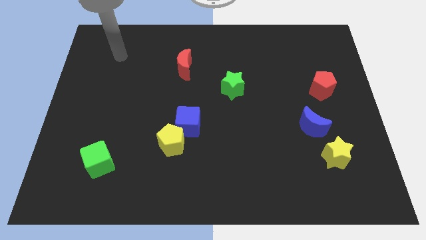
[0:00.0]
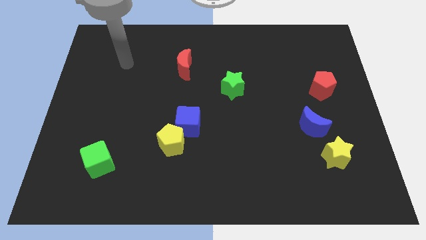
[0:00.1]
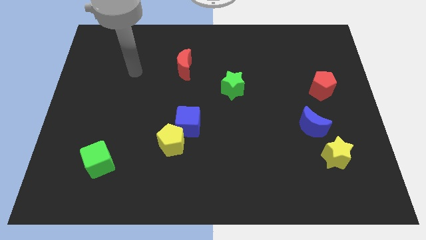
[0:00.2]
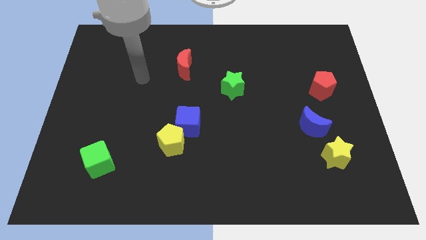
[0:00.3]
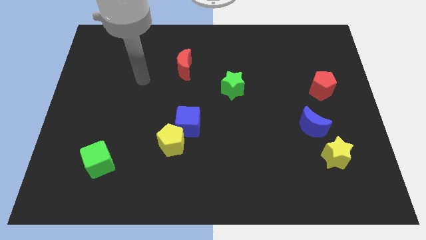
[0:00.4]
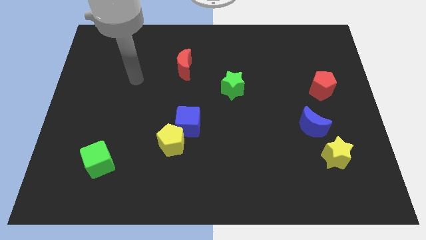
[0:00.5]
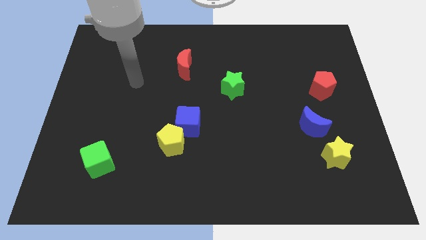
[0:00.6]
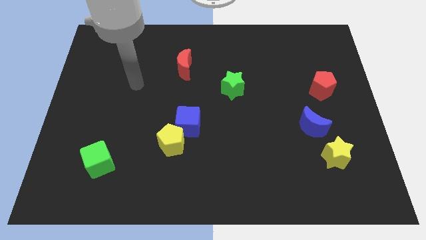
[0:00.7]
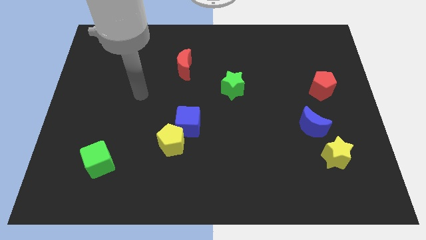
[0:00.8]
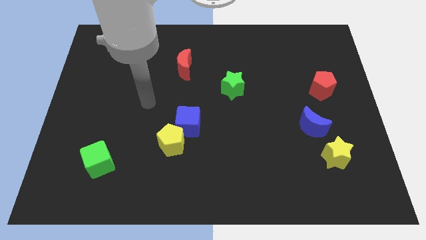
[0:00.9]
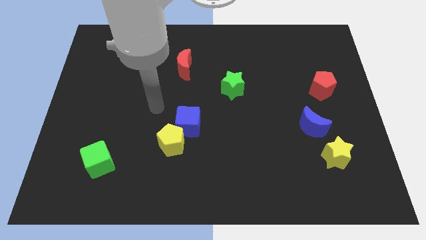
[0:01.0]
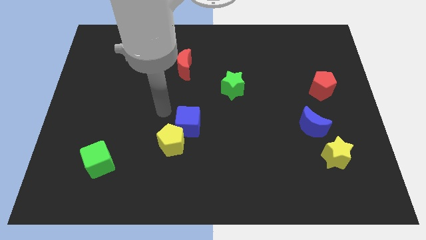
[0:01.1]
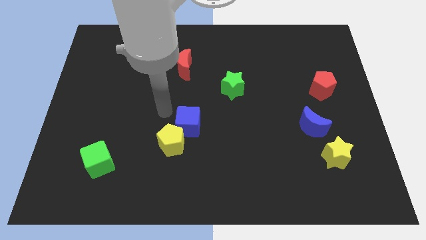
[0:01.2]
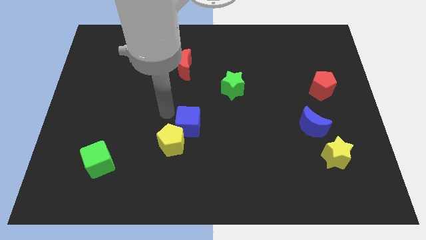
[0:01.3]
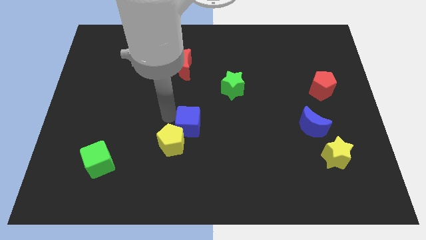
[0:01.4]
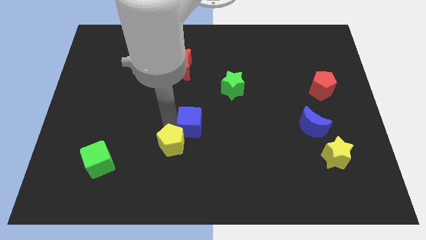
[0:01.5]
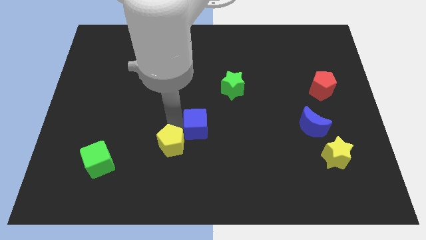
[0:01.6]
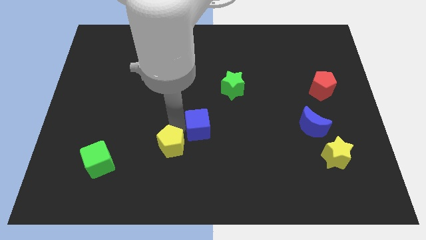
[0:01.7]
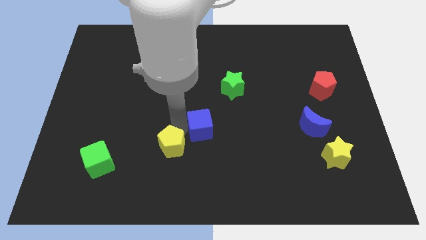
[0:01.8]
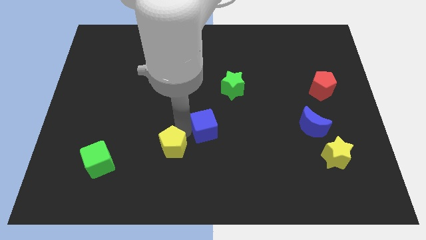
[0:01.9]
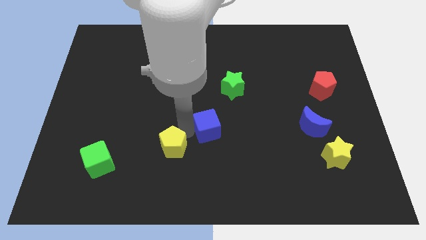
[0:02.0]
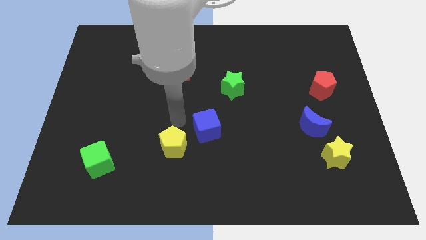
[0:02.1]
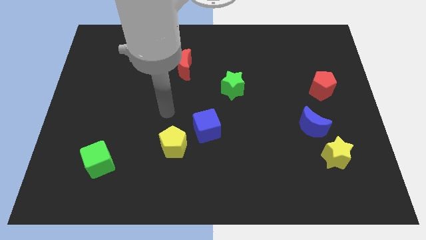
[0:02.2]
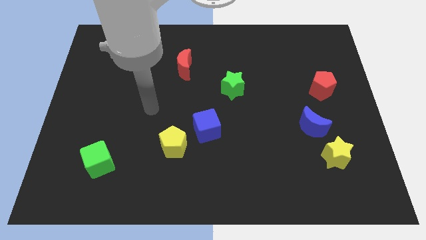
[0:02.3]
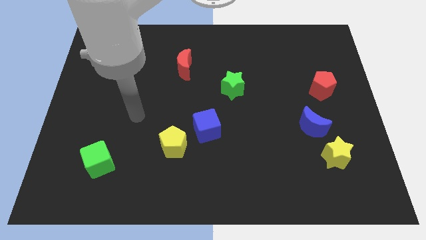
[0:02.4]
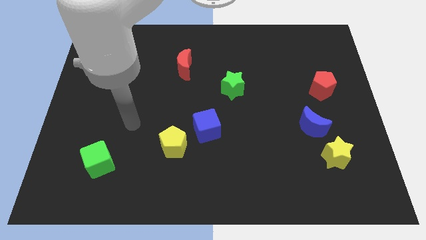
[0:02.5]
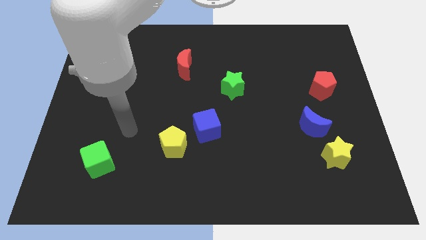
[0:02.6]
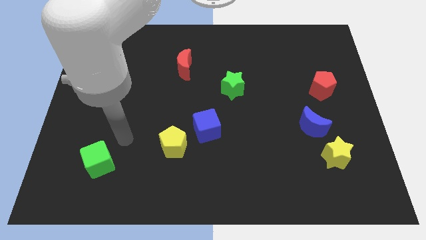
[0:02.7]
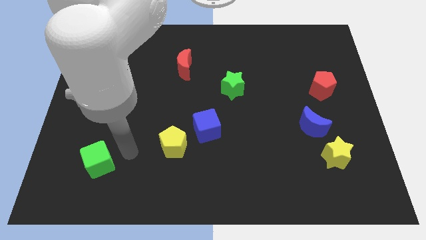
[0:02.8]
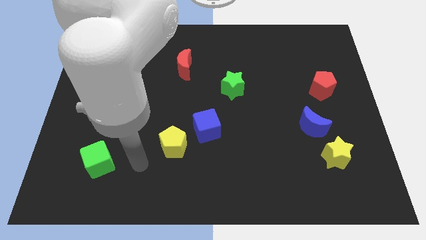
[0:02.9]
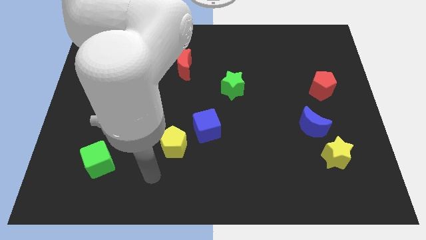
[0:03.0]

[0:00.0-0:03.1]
slide the blue cube diagonally to the green star

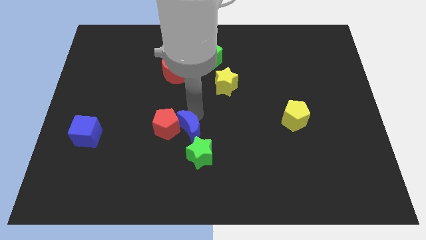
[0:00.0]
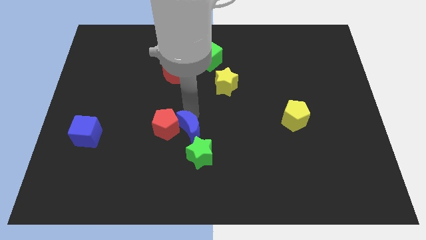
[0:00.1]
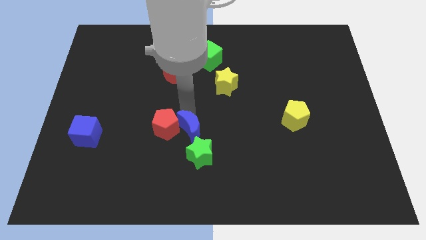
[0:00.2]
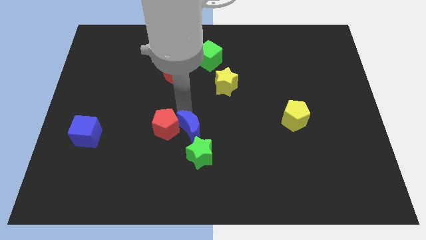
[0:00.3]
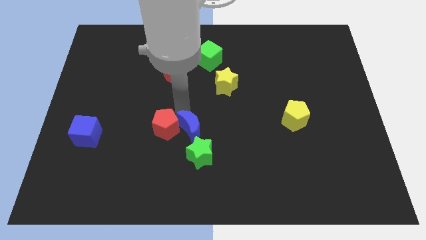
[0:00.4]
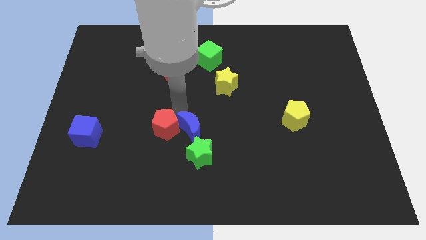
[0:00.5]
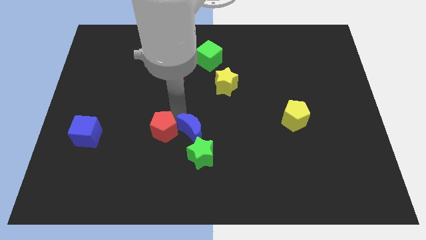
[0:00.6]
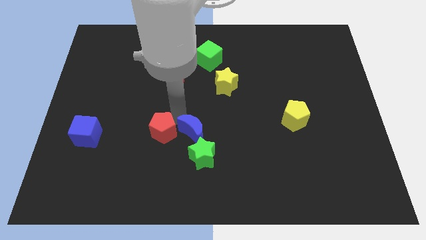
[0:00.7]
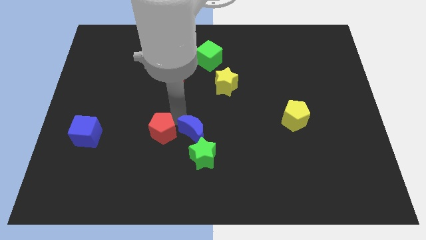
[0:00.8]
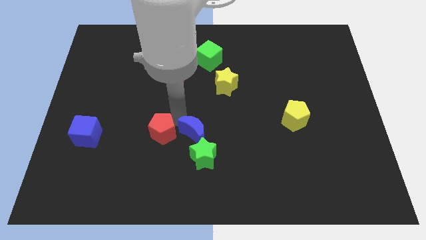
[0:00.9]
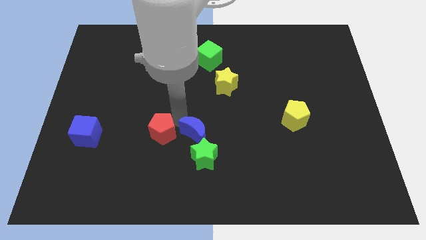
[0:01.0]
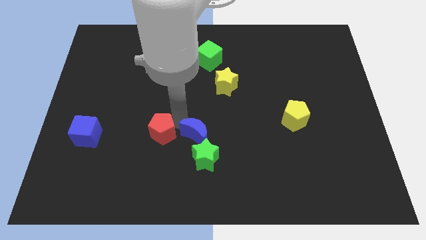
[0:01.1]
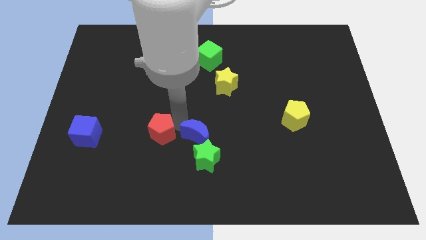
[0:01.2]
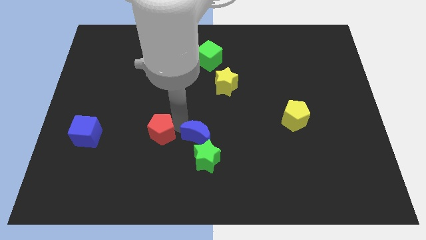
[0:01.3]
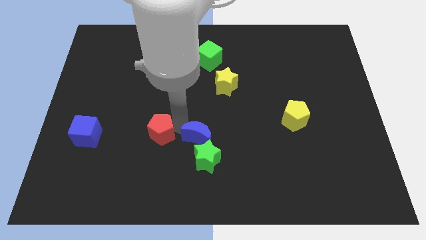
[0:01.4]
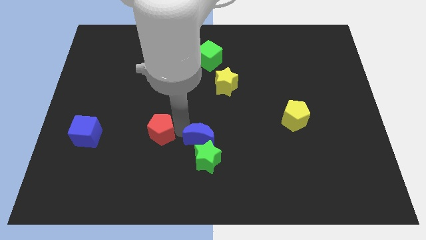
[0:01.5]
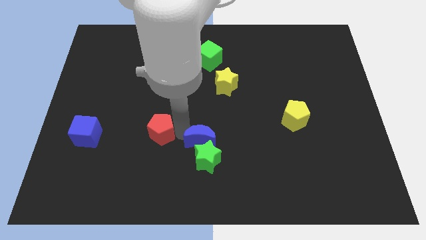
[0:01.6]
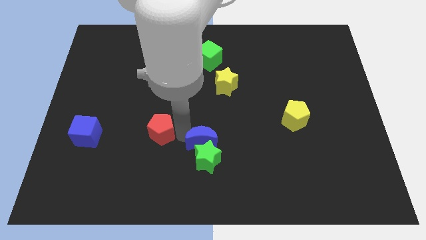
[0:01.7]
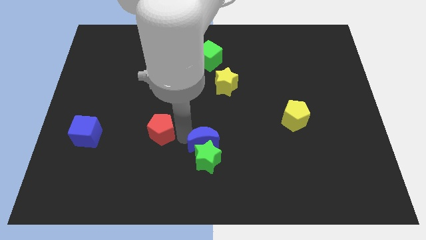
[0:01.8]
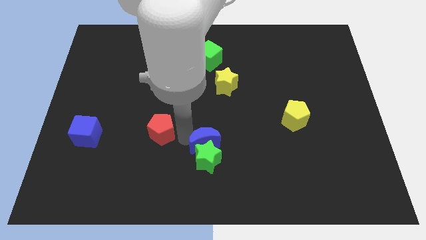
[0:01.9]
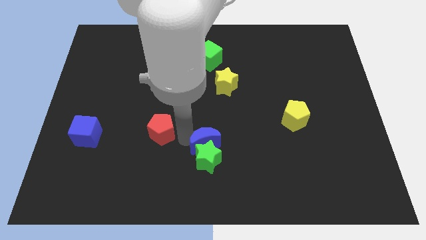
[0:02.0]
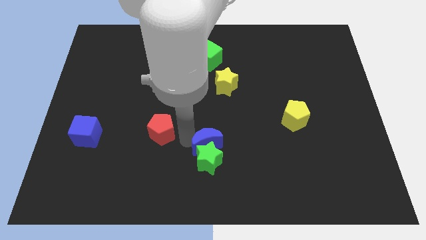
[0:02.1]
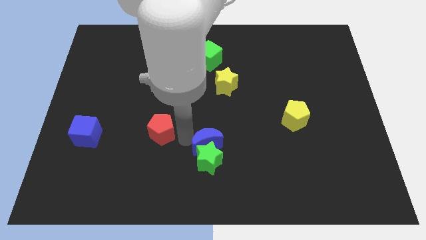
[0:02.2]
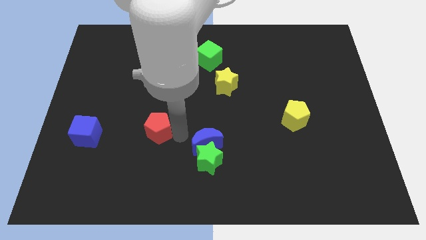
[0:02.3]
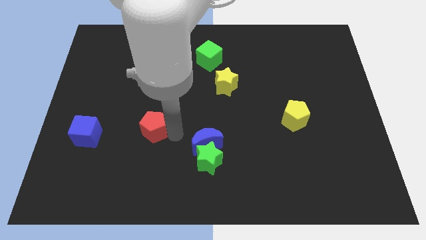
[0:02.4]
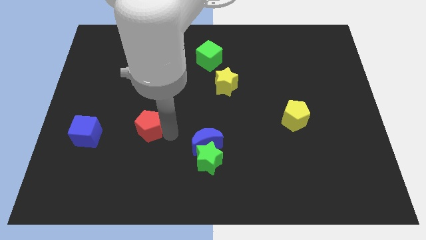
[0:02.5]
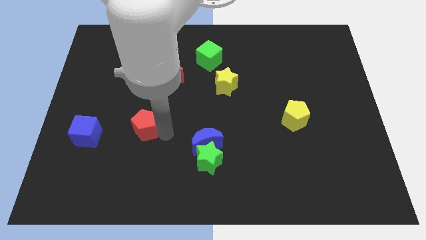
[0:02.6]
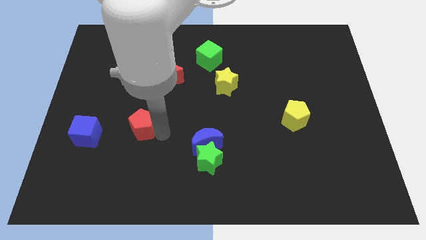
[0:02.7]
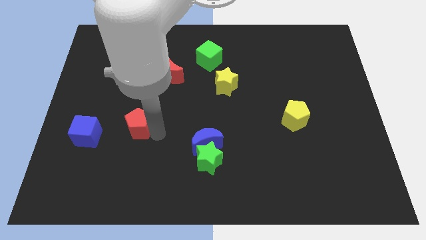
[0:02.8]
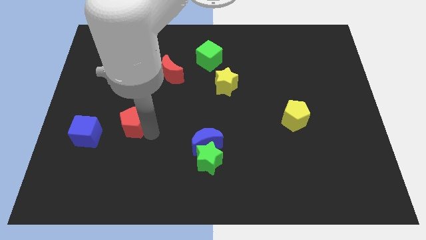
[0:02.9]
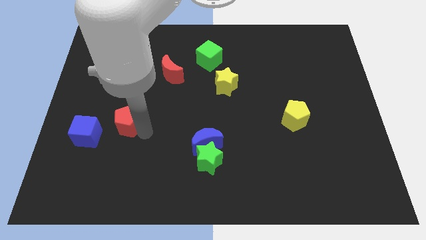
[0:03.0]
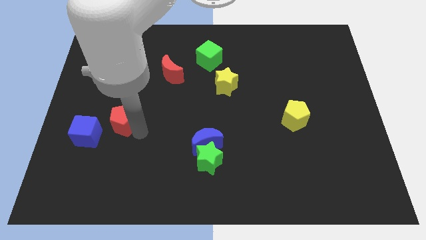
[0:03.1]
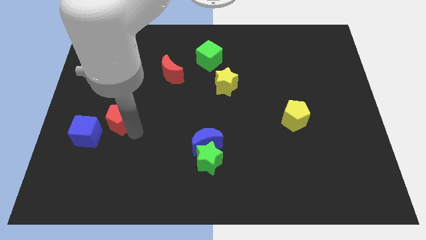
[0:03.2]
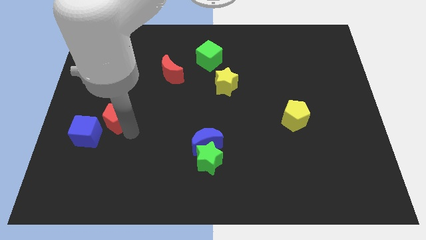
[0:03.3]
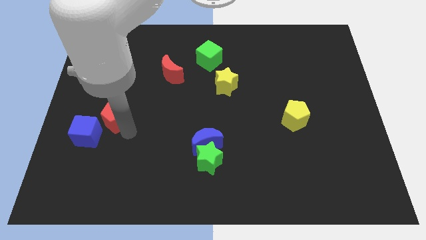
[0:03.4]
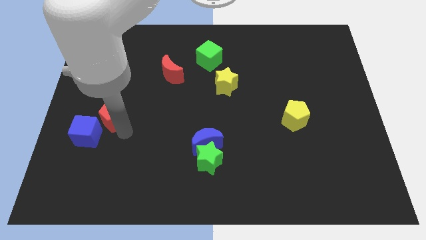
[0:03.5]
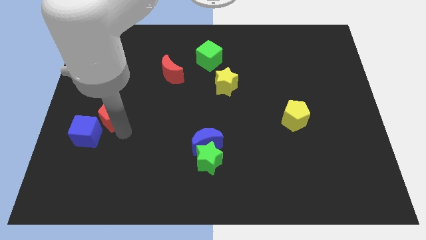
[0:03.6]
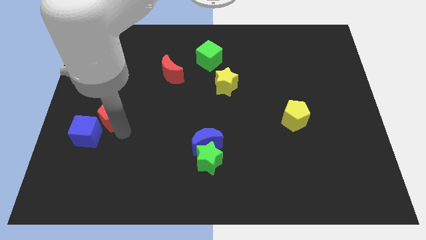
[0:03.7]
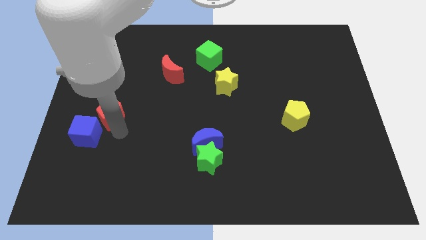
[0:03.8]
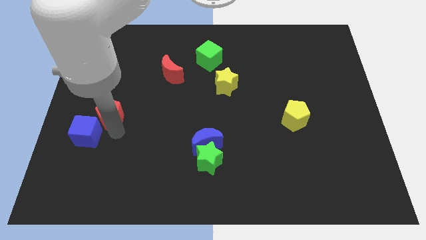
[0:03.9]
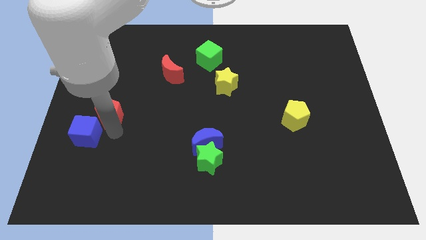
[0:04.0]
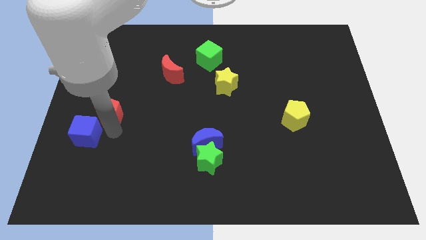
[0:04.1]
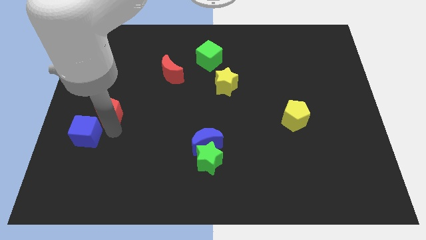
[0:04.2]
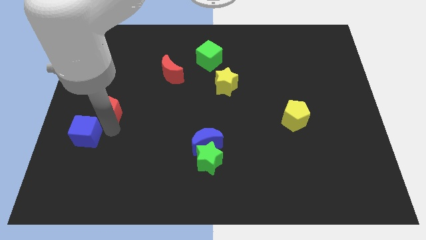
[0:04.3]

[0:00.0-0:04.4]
push the blue moon into the green star and red pentagon into blue cube

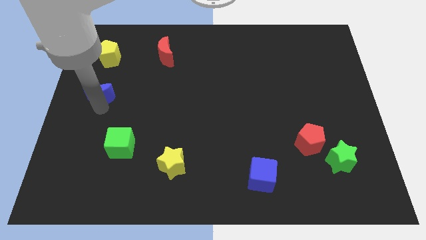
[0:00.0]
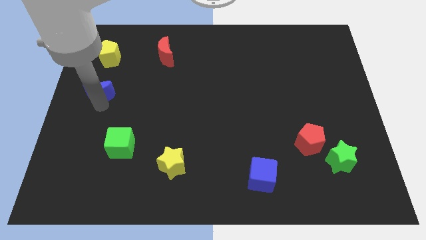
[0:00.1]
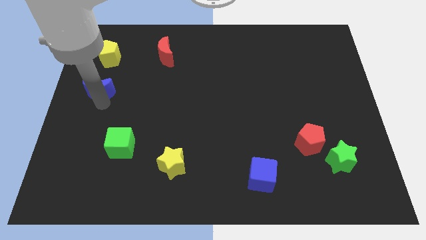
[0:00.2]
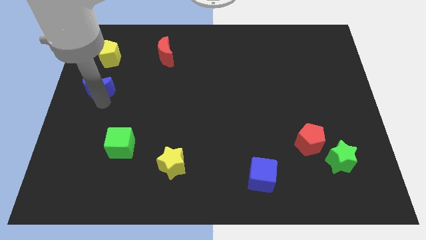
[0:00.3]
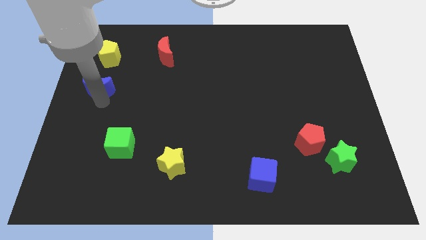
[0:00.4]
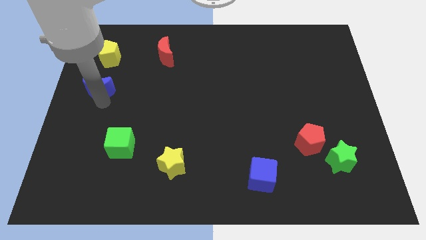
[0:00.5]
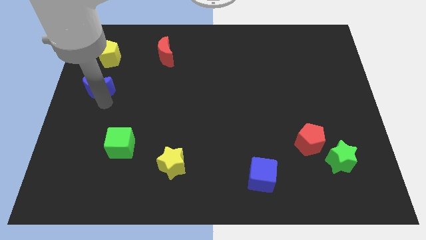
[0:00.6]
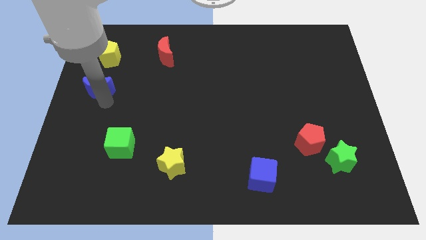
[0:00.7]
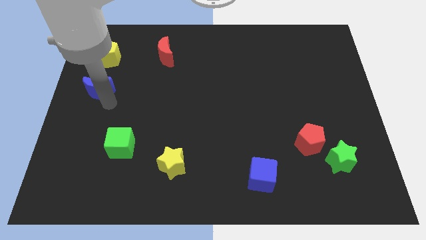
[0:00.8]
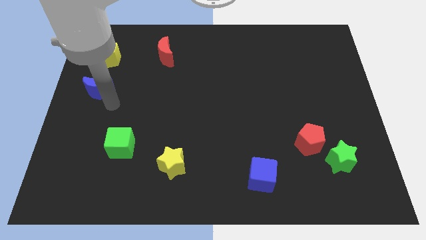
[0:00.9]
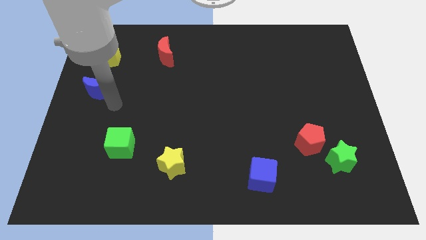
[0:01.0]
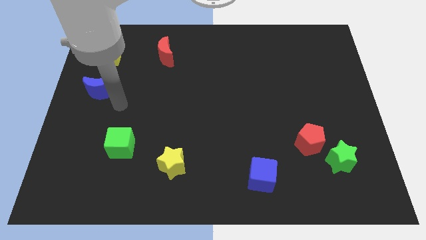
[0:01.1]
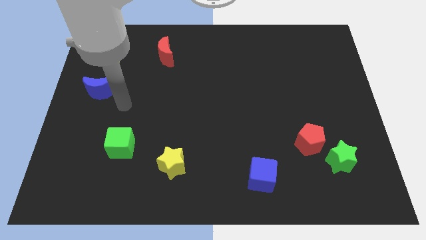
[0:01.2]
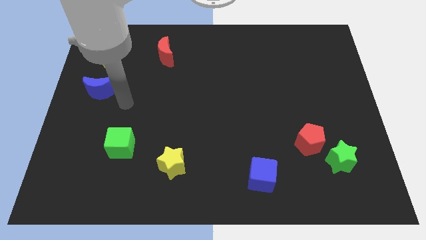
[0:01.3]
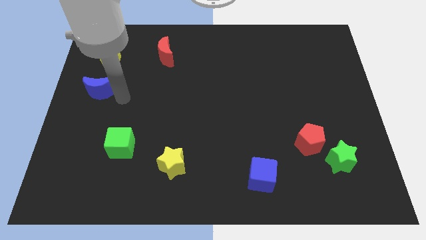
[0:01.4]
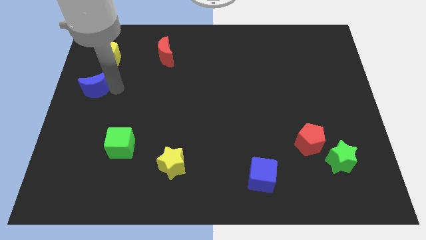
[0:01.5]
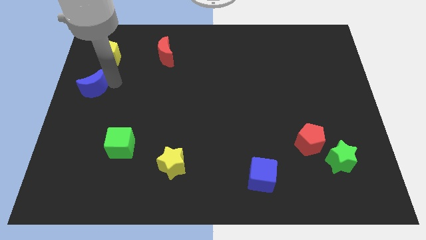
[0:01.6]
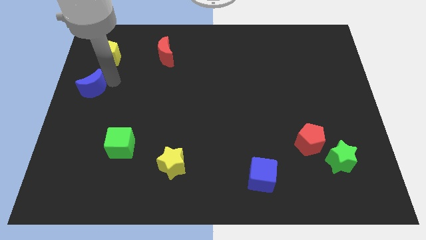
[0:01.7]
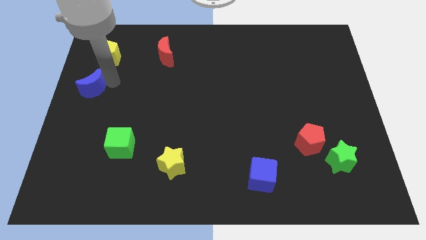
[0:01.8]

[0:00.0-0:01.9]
move the blue cube towards the yellow pentagon
